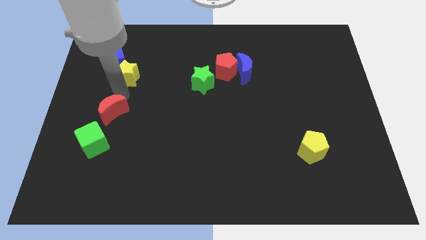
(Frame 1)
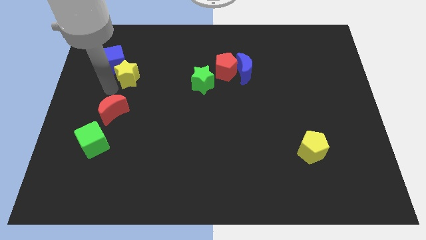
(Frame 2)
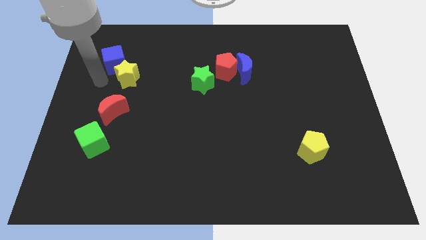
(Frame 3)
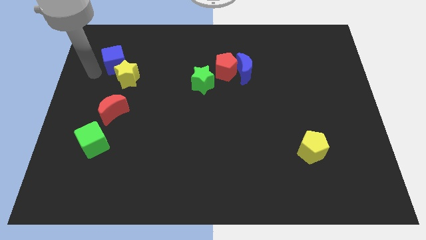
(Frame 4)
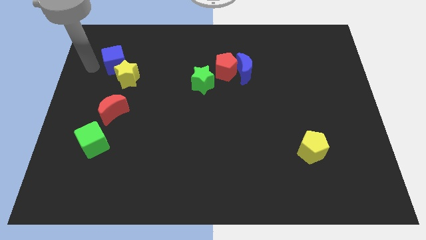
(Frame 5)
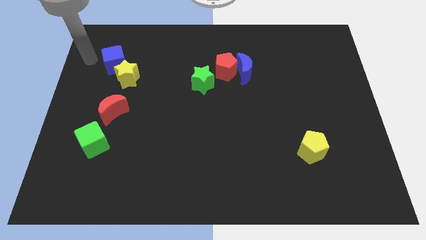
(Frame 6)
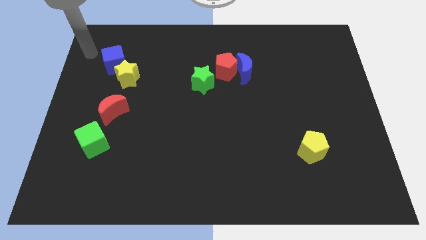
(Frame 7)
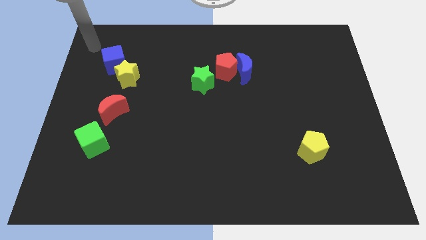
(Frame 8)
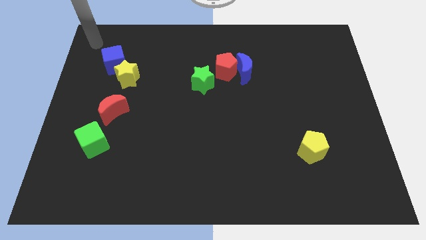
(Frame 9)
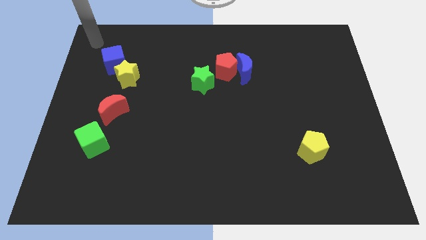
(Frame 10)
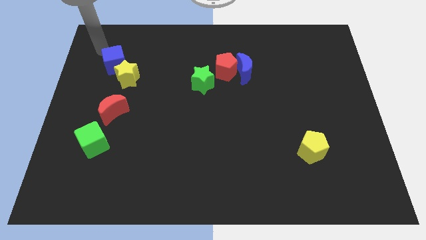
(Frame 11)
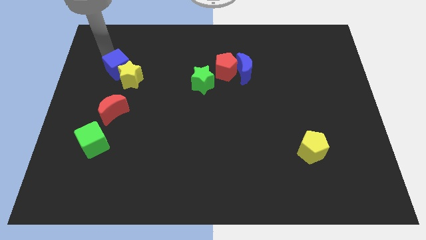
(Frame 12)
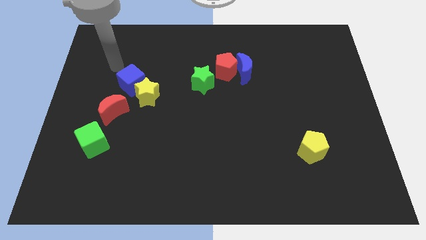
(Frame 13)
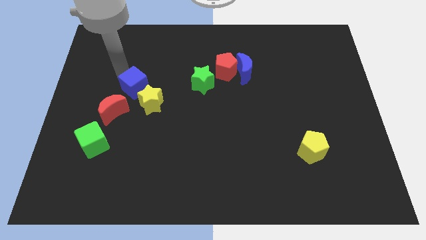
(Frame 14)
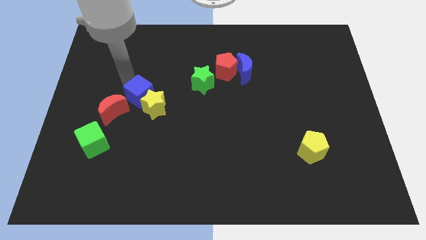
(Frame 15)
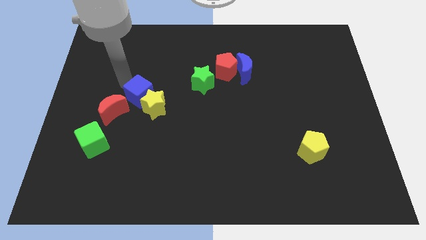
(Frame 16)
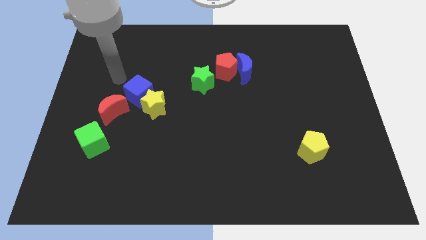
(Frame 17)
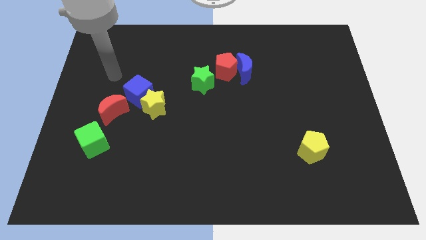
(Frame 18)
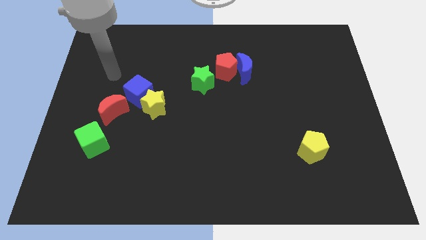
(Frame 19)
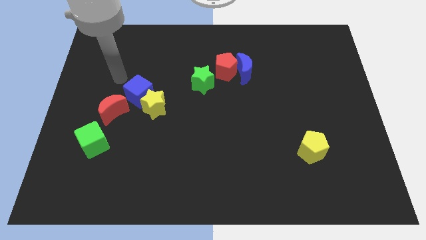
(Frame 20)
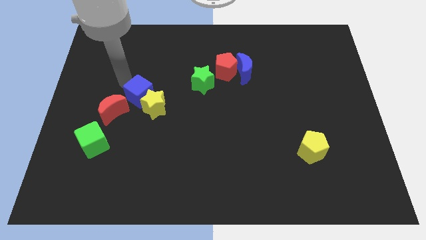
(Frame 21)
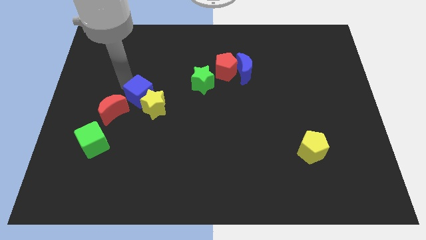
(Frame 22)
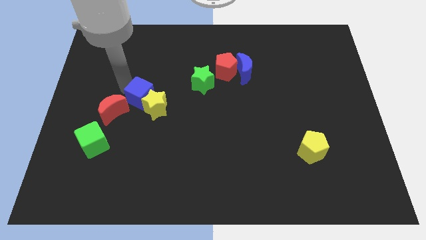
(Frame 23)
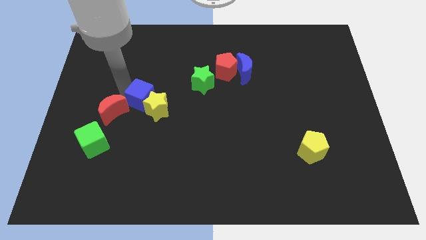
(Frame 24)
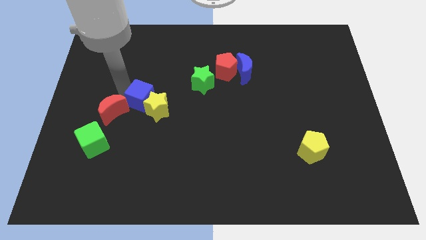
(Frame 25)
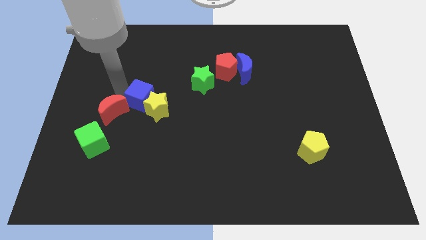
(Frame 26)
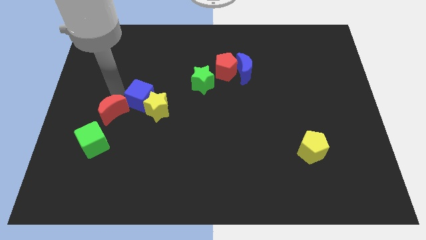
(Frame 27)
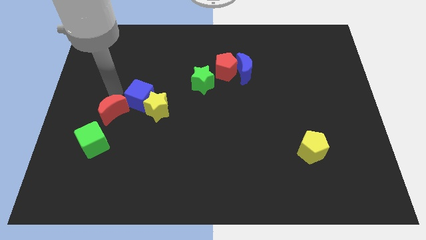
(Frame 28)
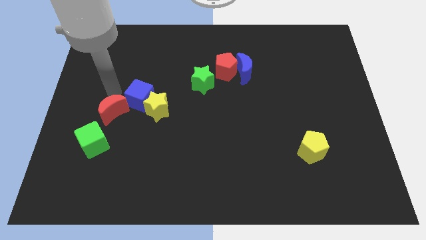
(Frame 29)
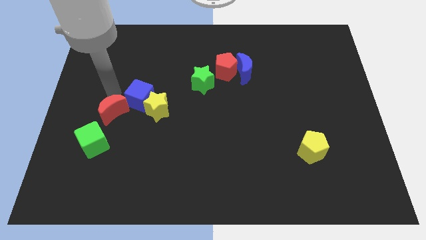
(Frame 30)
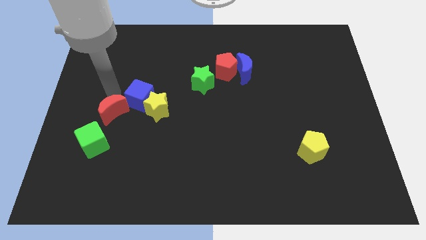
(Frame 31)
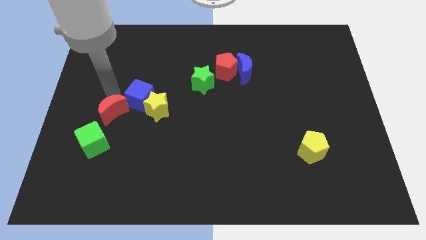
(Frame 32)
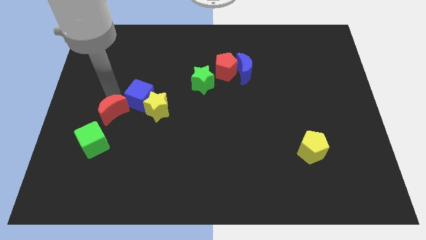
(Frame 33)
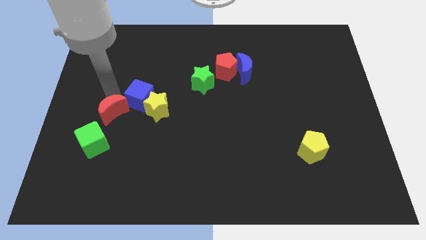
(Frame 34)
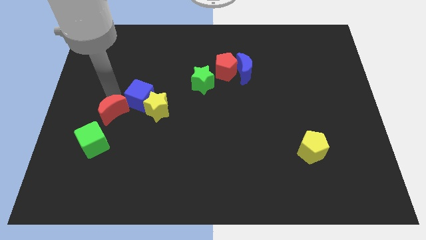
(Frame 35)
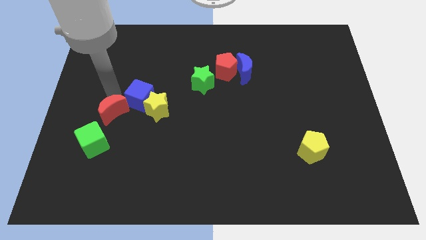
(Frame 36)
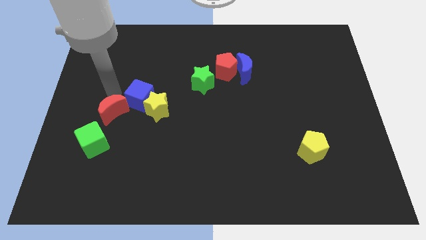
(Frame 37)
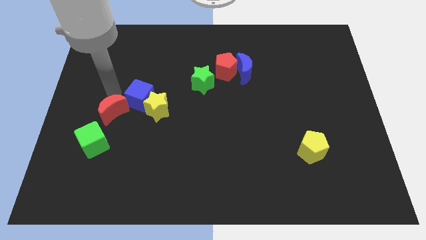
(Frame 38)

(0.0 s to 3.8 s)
move the blue cube close to the red crescent

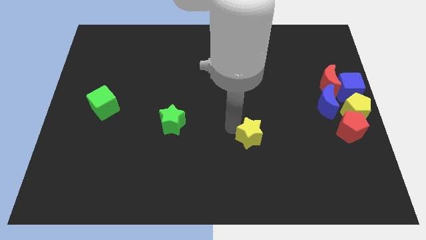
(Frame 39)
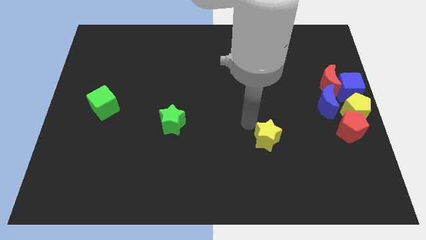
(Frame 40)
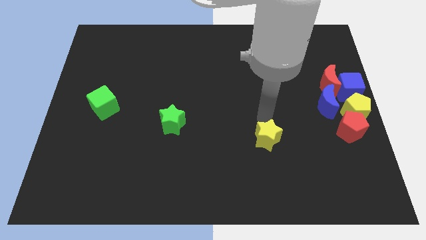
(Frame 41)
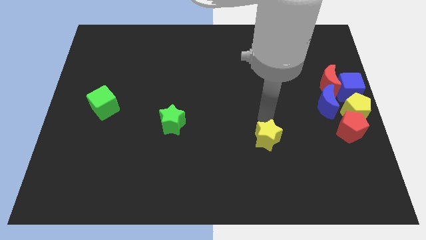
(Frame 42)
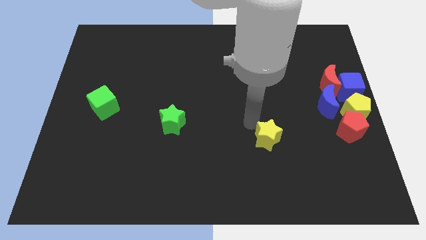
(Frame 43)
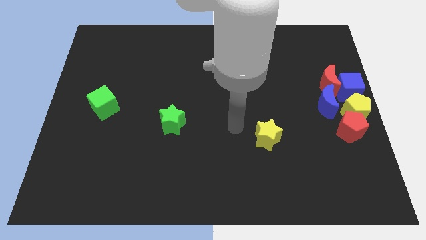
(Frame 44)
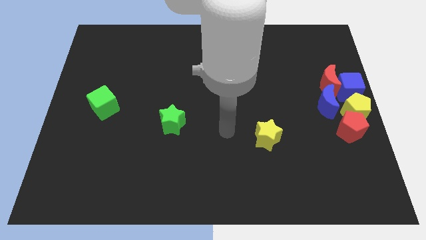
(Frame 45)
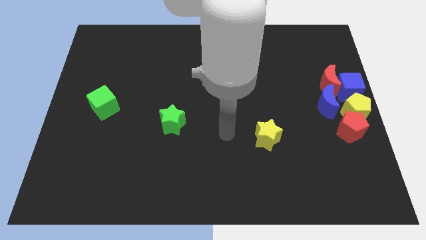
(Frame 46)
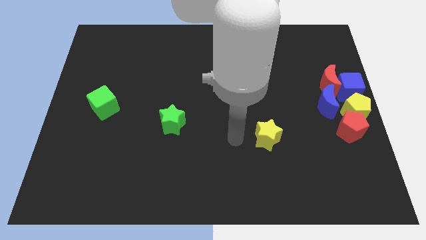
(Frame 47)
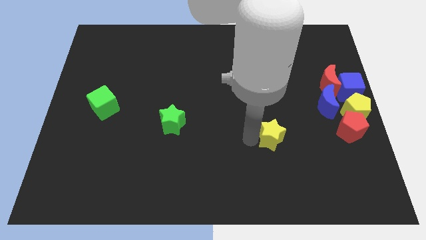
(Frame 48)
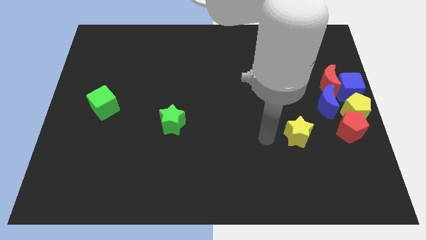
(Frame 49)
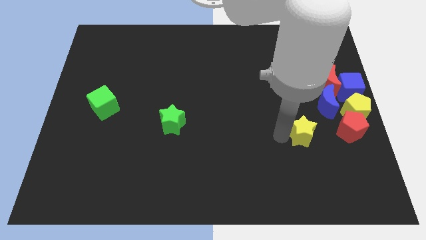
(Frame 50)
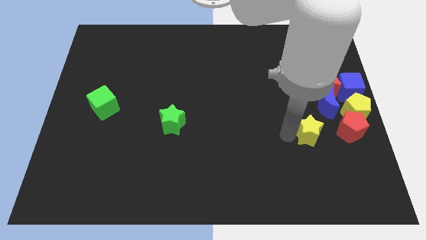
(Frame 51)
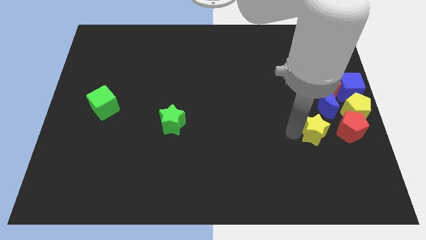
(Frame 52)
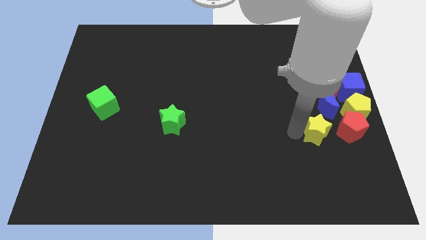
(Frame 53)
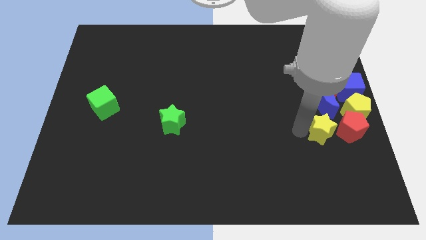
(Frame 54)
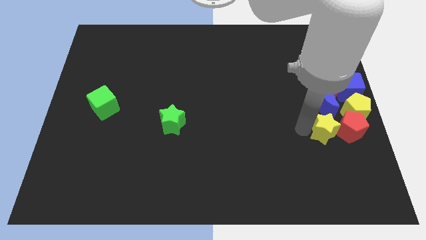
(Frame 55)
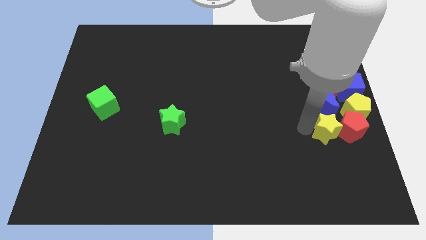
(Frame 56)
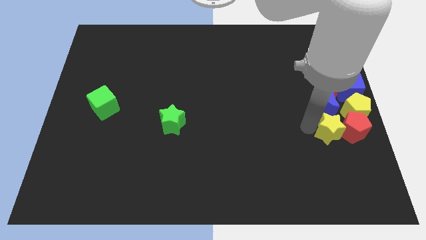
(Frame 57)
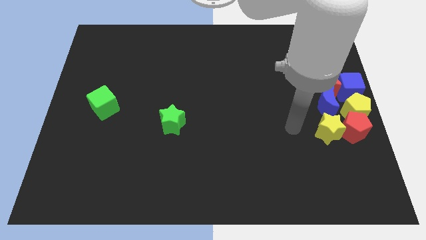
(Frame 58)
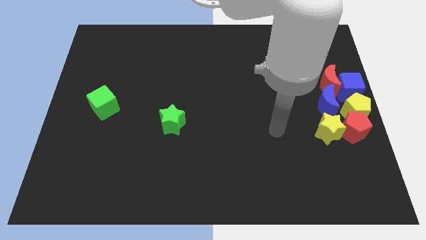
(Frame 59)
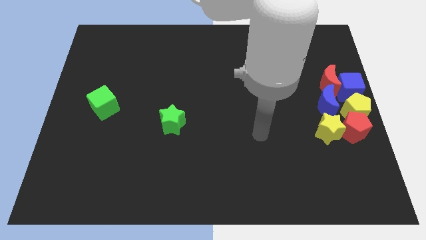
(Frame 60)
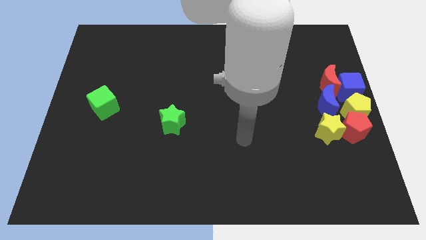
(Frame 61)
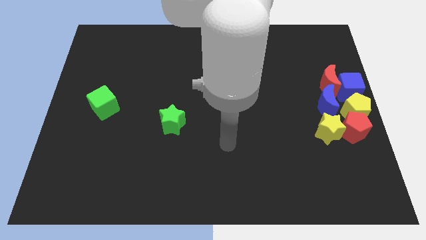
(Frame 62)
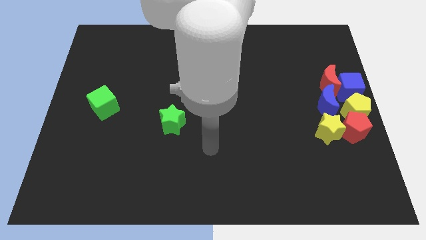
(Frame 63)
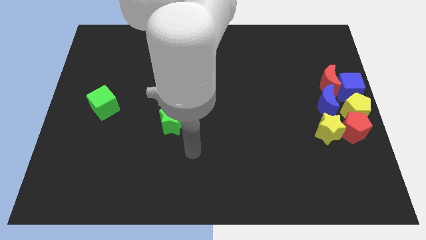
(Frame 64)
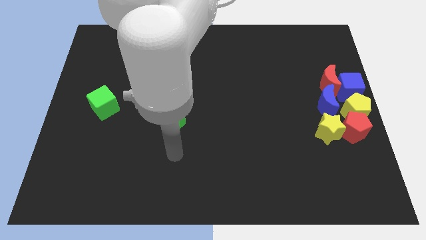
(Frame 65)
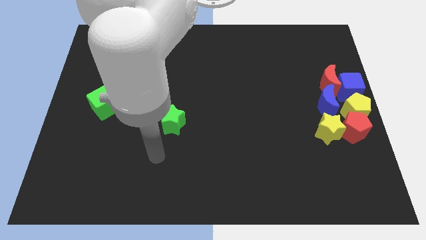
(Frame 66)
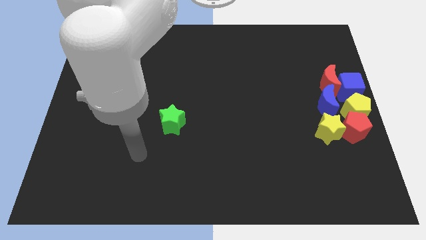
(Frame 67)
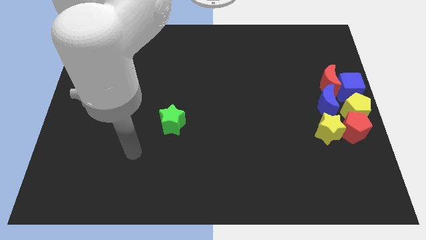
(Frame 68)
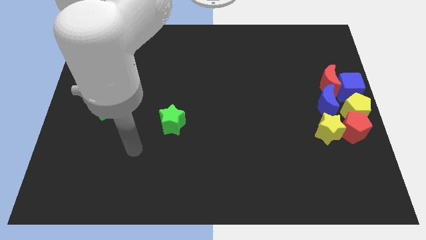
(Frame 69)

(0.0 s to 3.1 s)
slide yellow star to the left of red pentagon

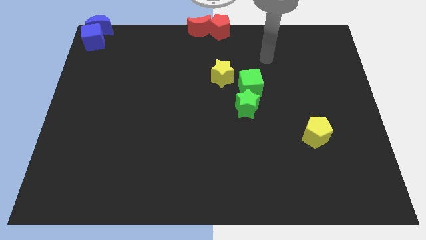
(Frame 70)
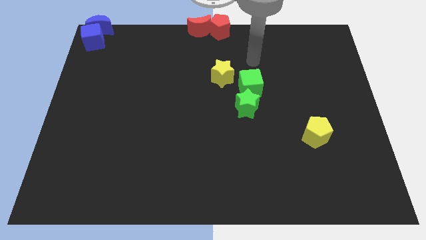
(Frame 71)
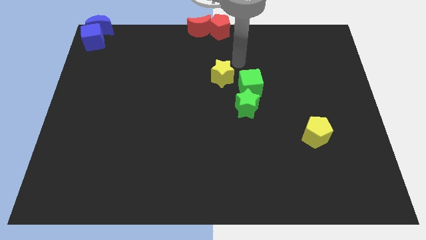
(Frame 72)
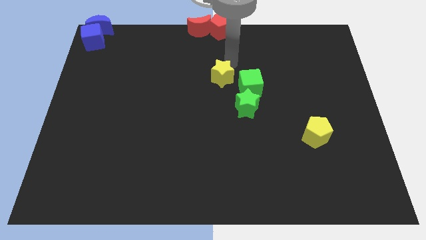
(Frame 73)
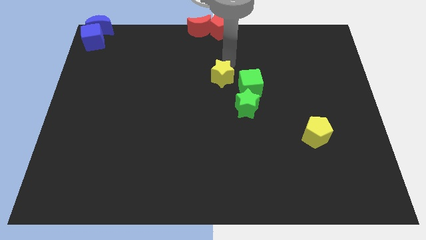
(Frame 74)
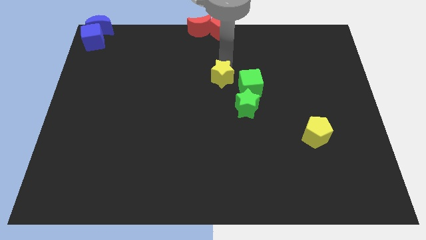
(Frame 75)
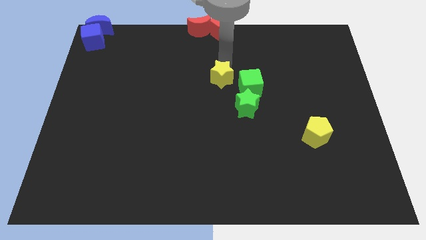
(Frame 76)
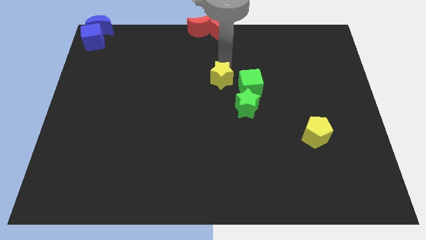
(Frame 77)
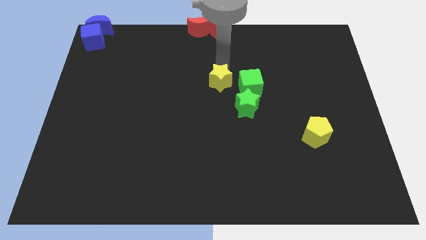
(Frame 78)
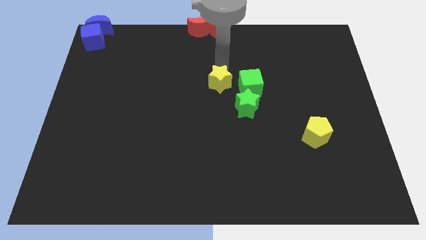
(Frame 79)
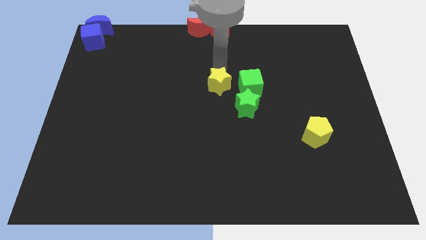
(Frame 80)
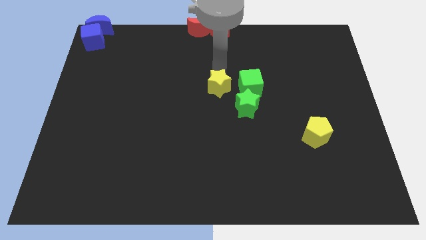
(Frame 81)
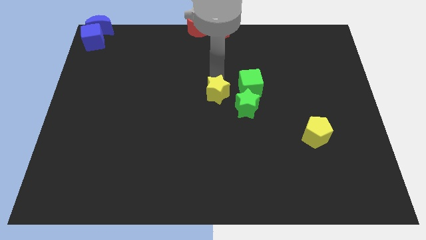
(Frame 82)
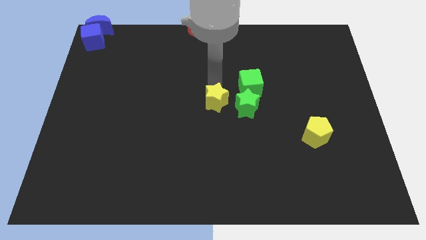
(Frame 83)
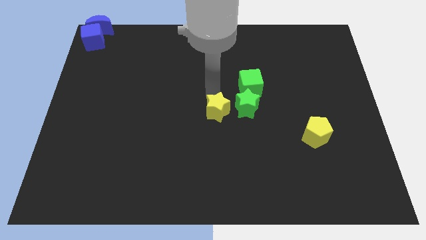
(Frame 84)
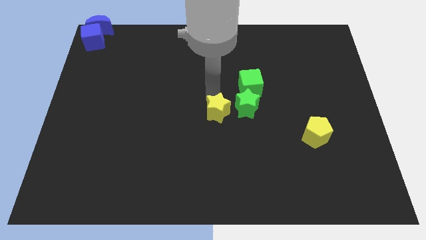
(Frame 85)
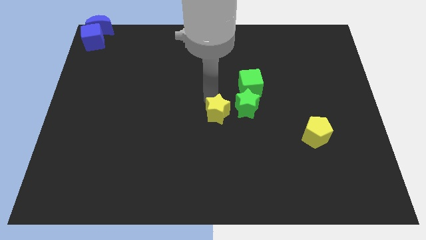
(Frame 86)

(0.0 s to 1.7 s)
move the yellow star to the left of the green star

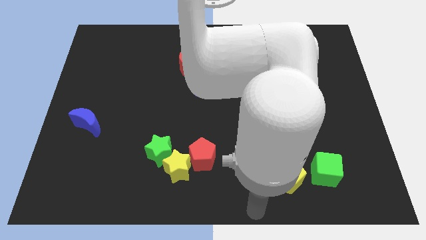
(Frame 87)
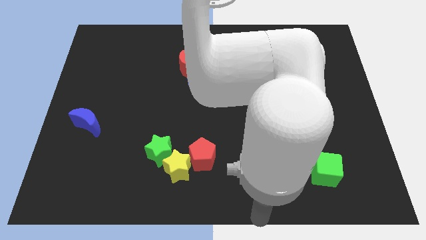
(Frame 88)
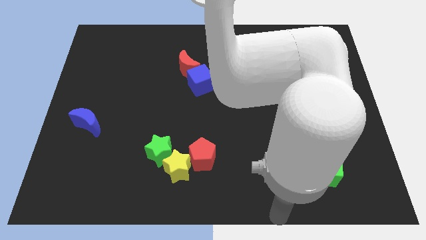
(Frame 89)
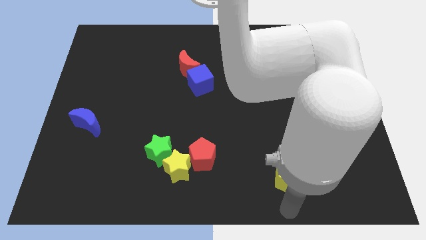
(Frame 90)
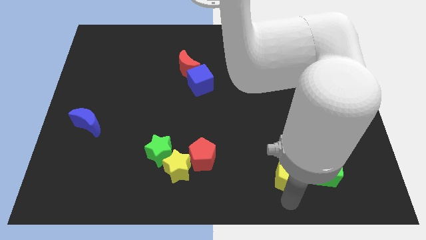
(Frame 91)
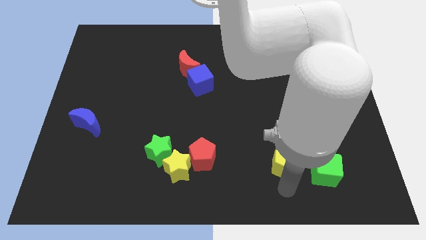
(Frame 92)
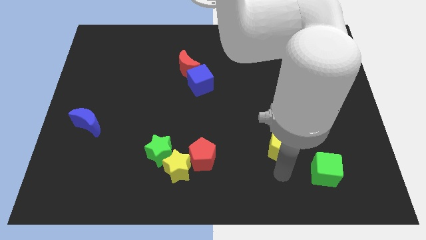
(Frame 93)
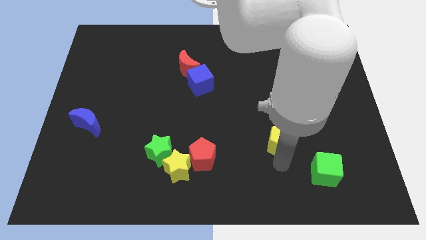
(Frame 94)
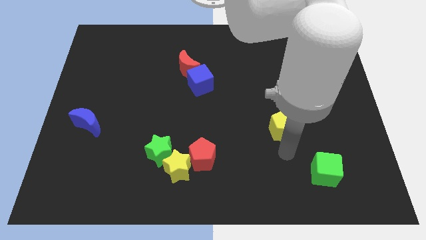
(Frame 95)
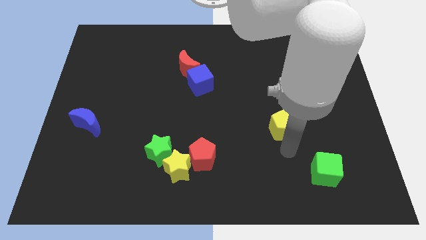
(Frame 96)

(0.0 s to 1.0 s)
move yellow pentagon slightly up
